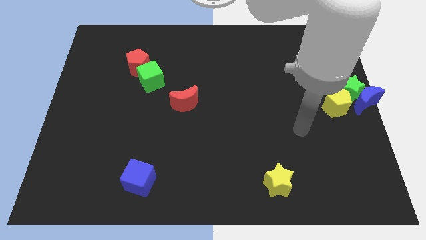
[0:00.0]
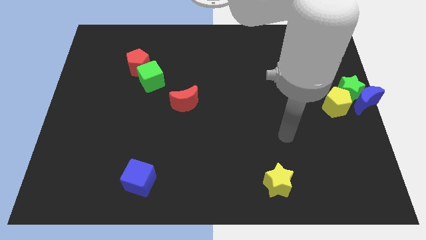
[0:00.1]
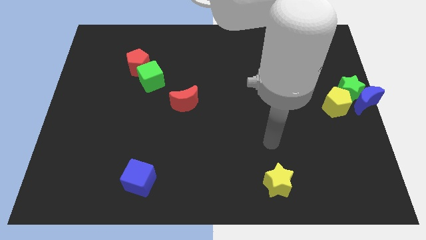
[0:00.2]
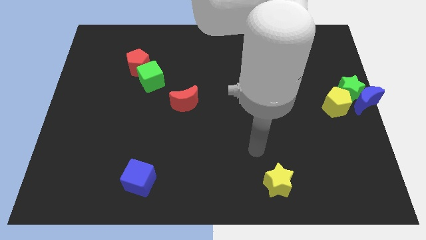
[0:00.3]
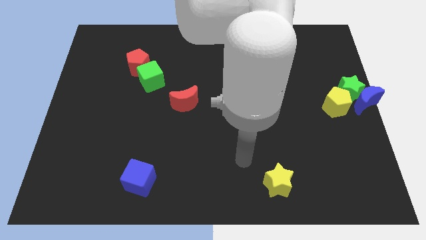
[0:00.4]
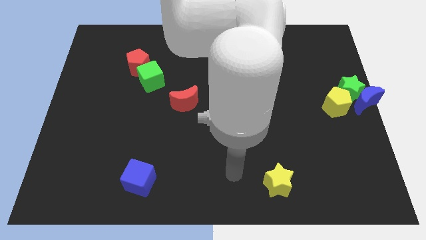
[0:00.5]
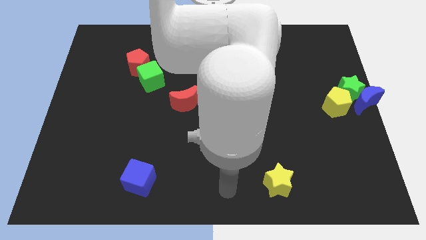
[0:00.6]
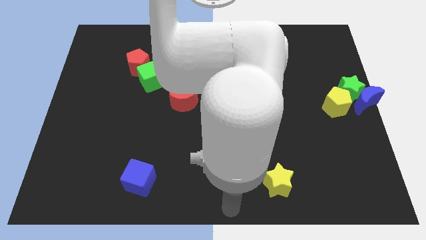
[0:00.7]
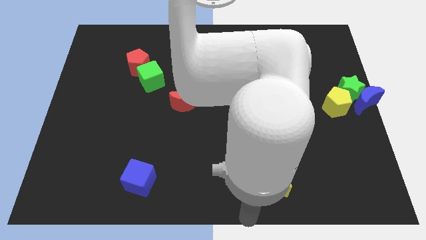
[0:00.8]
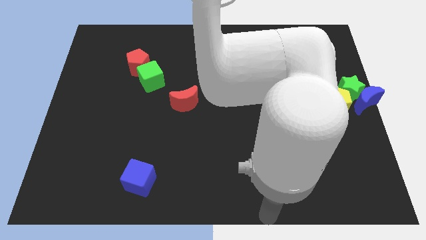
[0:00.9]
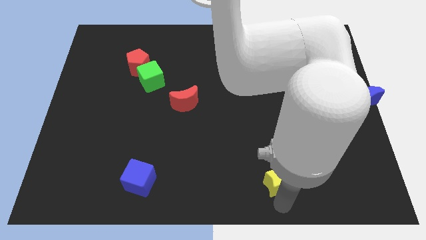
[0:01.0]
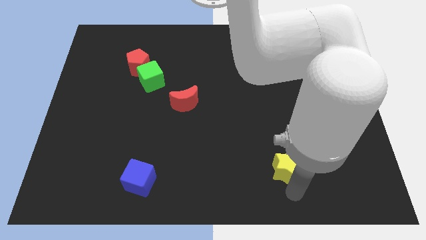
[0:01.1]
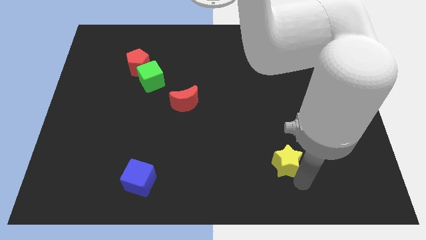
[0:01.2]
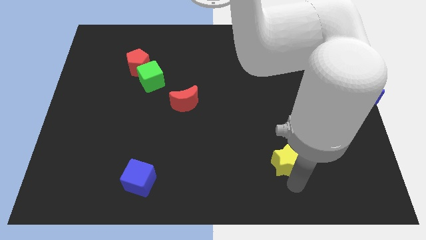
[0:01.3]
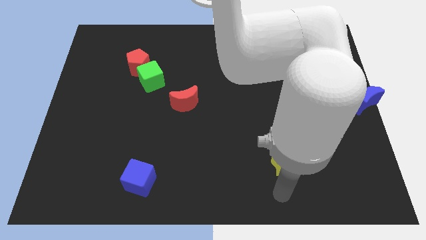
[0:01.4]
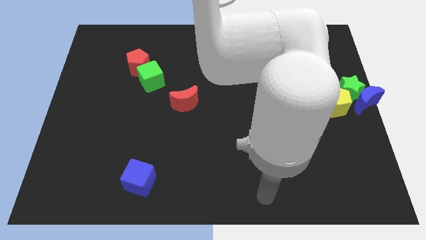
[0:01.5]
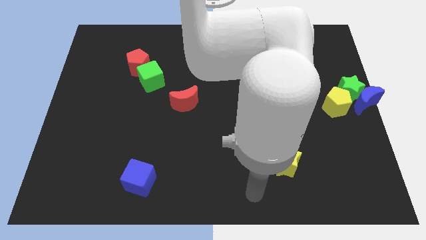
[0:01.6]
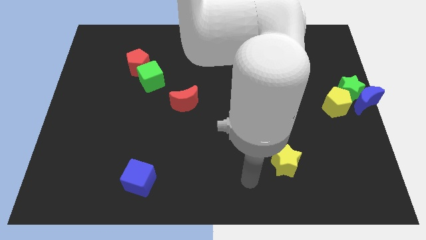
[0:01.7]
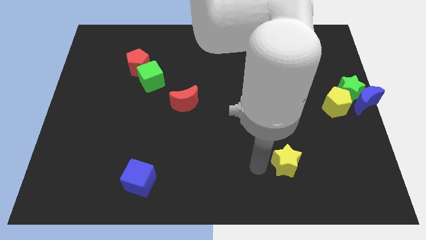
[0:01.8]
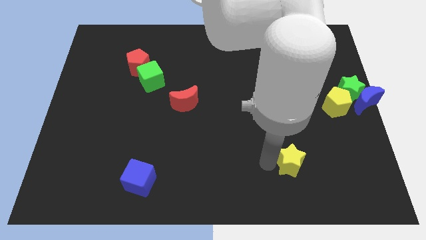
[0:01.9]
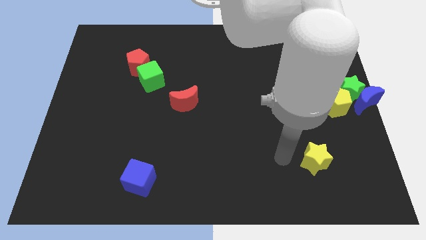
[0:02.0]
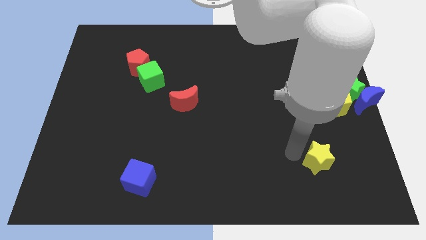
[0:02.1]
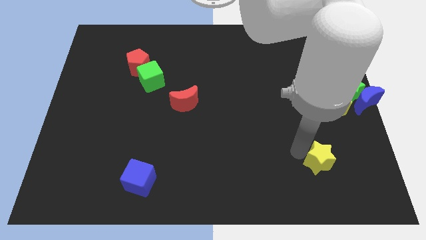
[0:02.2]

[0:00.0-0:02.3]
move the yellow star diagonally to blue moon

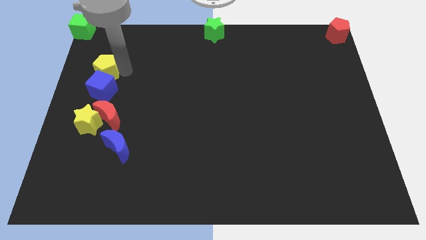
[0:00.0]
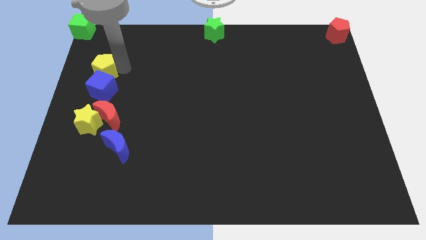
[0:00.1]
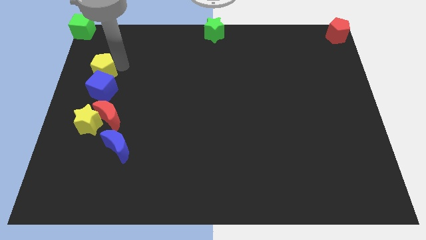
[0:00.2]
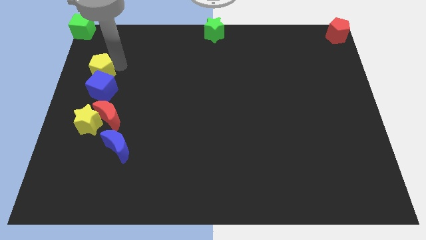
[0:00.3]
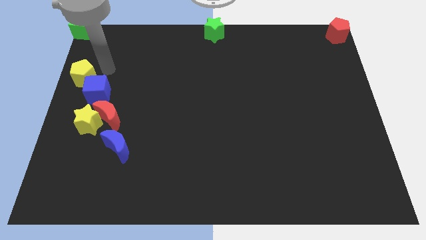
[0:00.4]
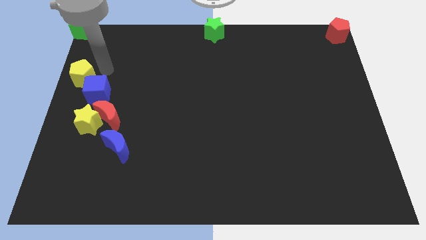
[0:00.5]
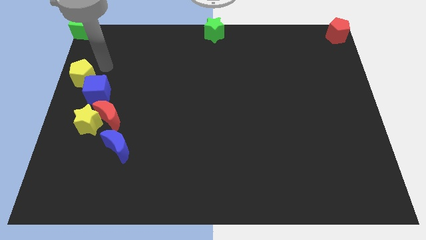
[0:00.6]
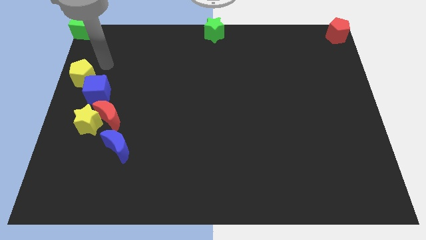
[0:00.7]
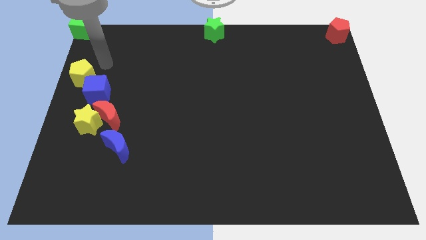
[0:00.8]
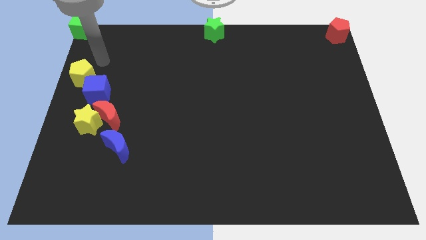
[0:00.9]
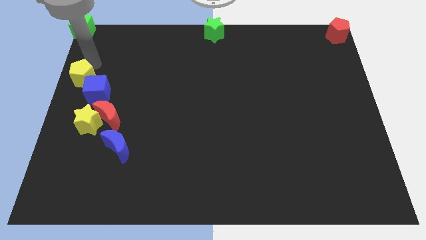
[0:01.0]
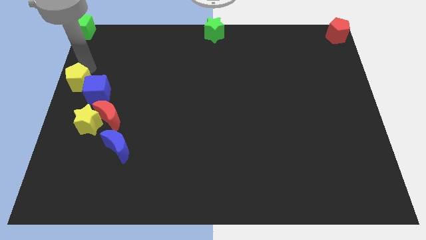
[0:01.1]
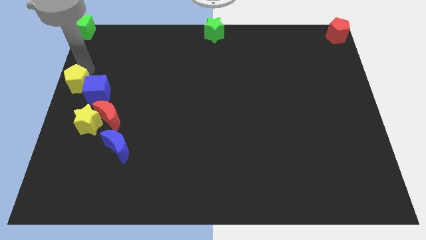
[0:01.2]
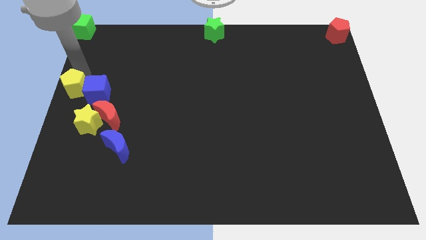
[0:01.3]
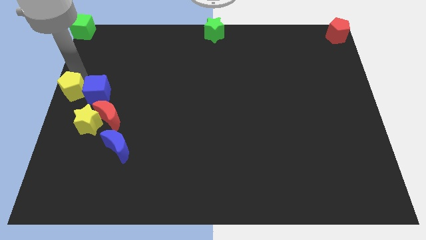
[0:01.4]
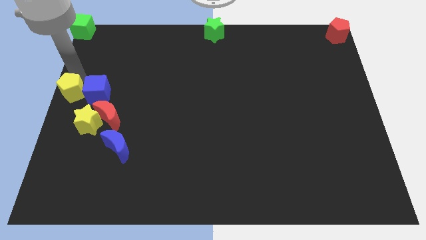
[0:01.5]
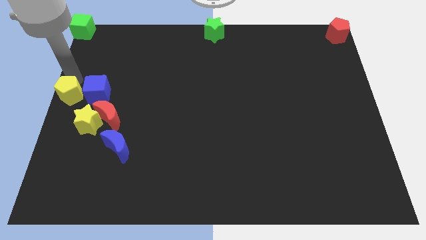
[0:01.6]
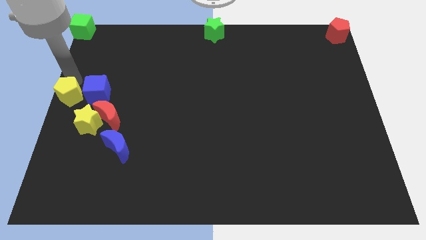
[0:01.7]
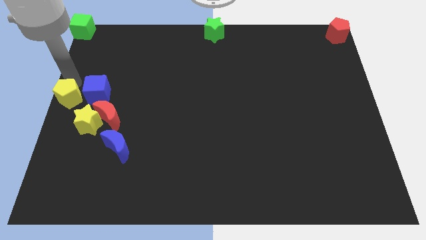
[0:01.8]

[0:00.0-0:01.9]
push the yellow pentagon to the left of the blue cube

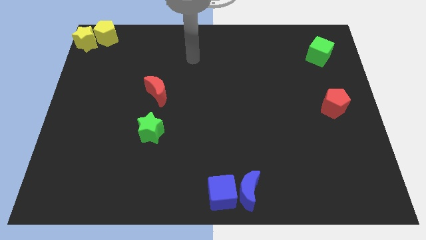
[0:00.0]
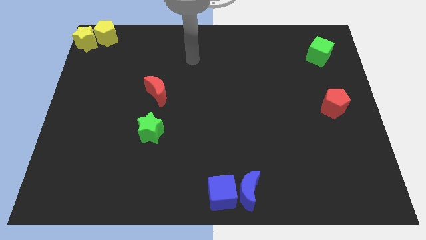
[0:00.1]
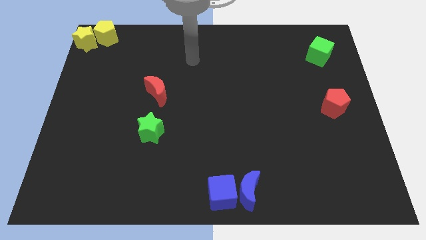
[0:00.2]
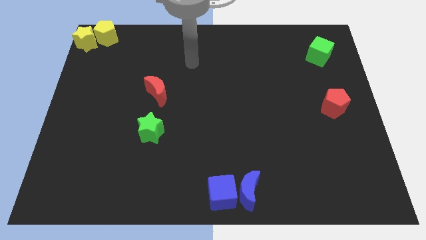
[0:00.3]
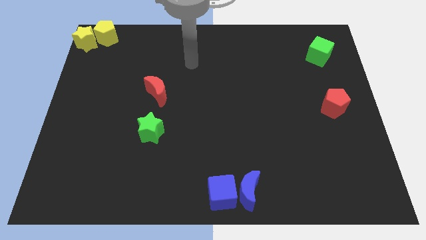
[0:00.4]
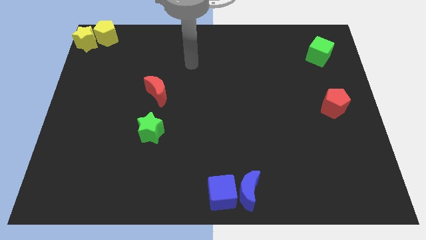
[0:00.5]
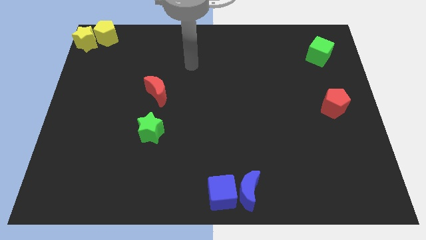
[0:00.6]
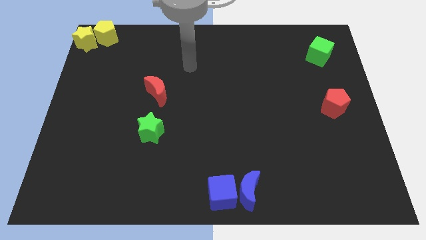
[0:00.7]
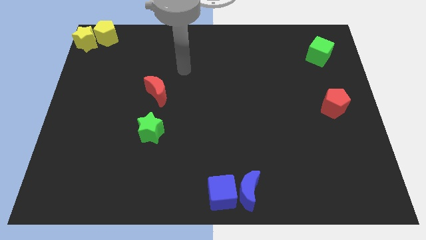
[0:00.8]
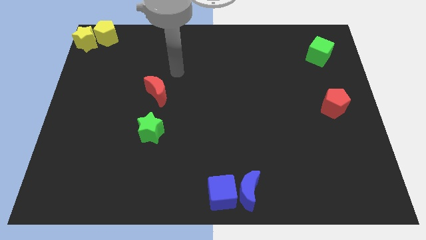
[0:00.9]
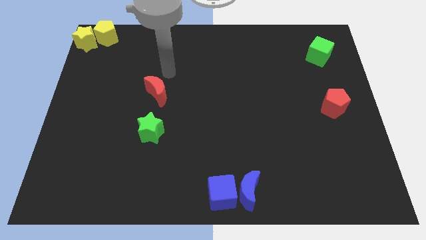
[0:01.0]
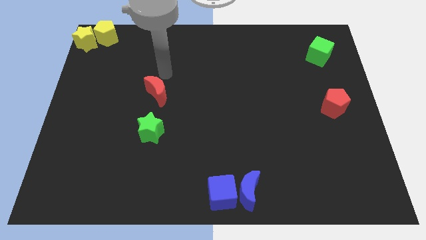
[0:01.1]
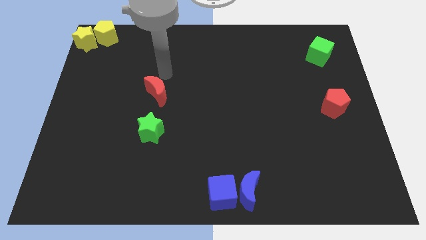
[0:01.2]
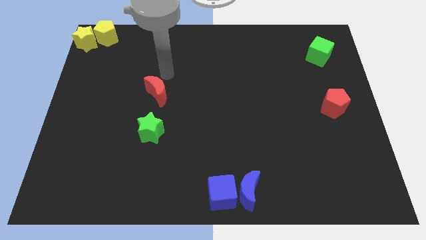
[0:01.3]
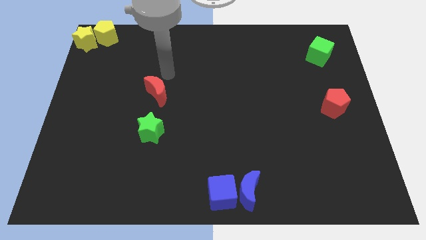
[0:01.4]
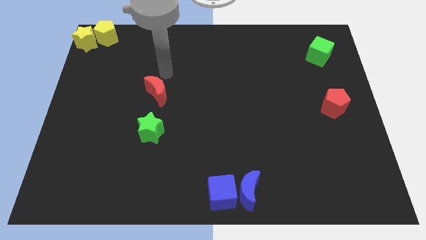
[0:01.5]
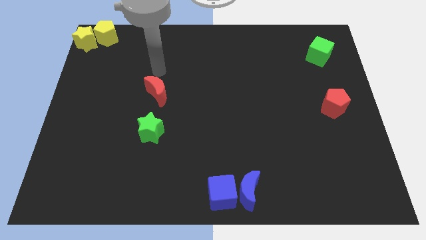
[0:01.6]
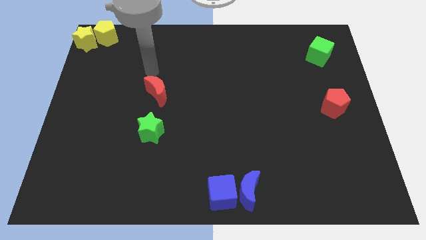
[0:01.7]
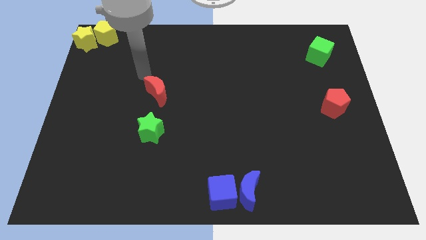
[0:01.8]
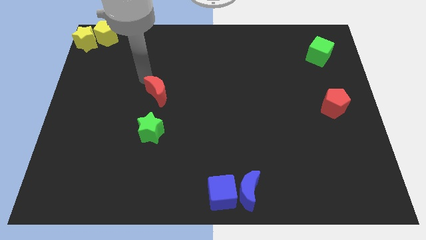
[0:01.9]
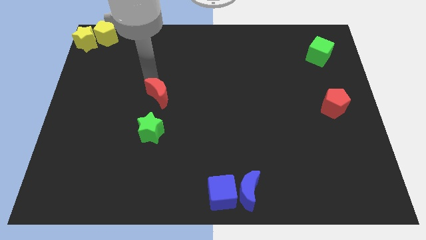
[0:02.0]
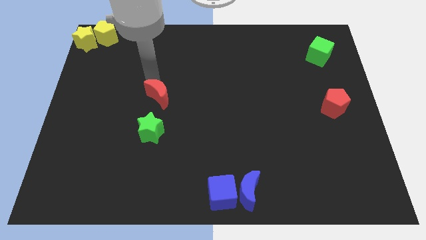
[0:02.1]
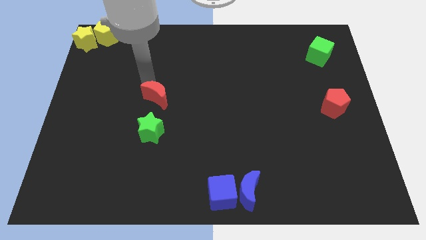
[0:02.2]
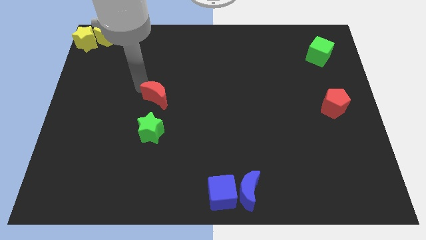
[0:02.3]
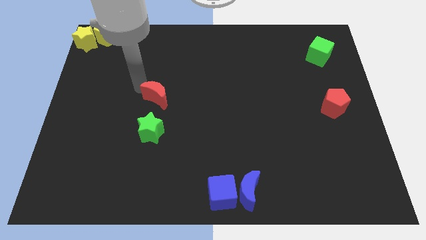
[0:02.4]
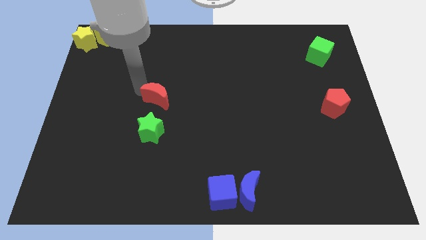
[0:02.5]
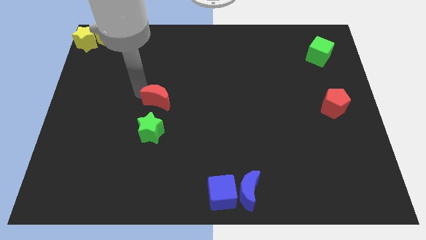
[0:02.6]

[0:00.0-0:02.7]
move the red crescent slightly towards green star

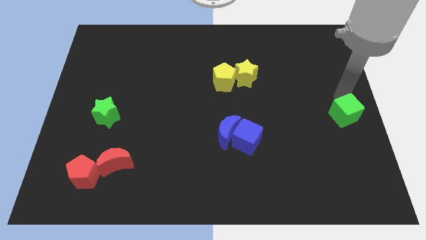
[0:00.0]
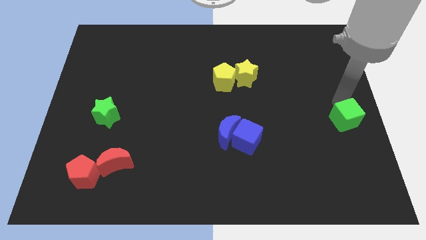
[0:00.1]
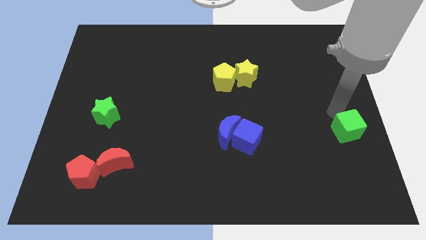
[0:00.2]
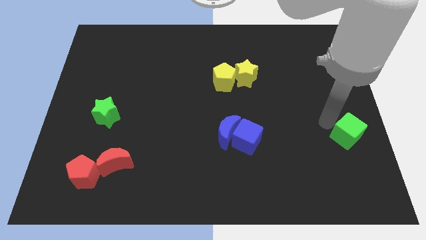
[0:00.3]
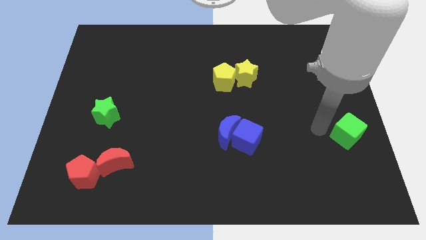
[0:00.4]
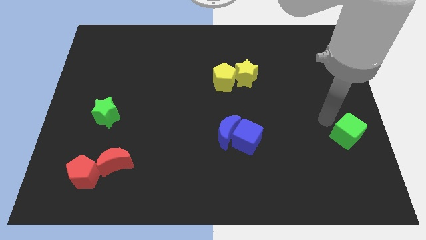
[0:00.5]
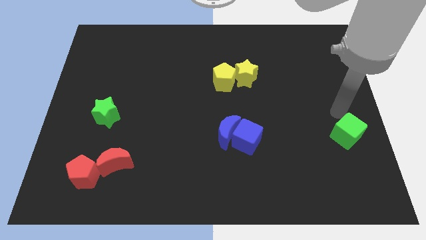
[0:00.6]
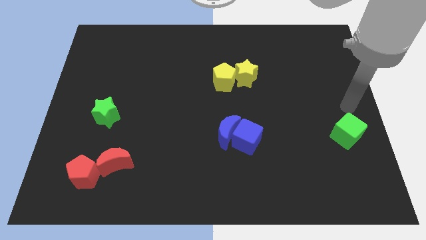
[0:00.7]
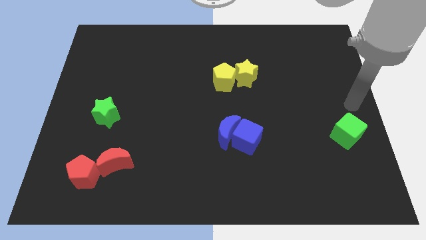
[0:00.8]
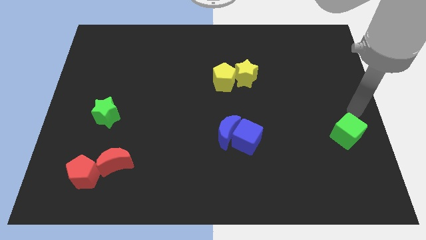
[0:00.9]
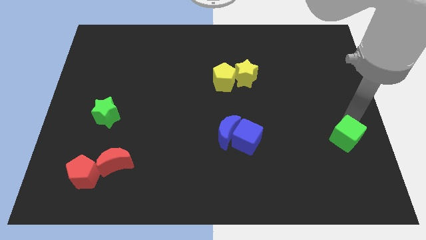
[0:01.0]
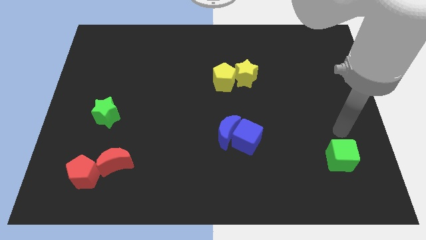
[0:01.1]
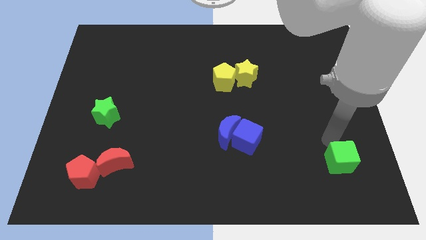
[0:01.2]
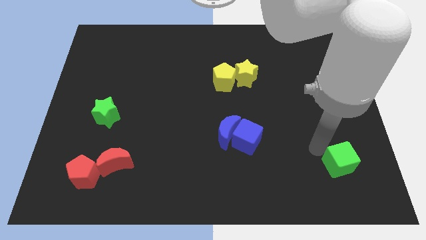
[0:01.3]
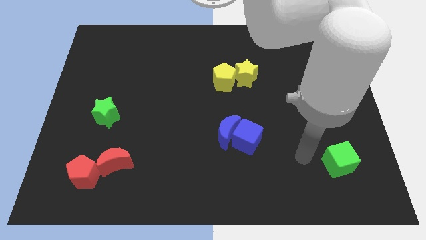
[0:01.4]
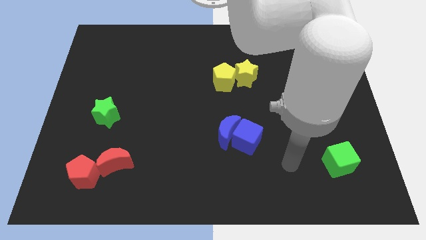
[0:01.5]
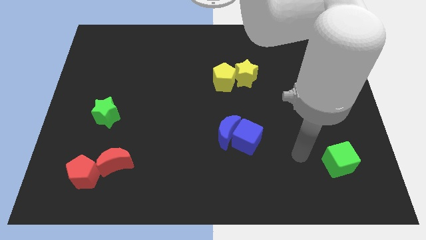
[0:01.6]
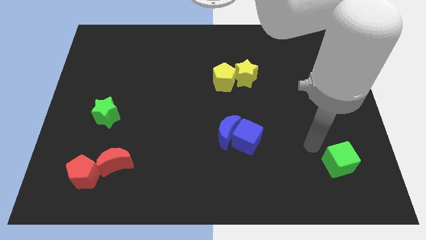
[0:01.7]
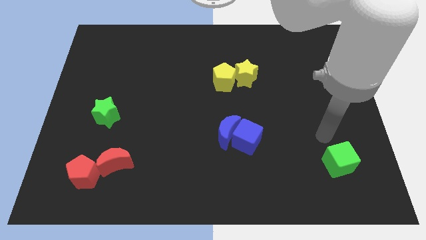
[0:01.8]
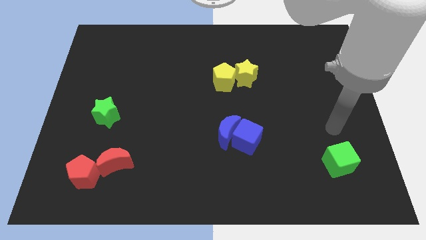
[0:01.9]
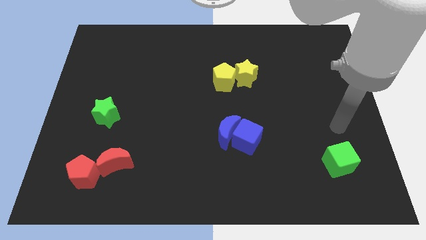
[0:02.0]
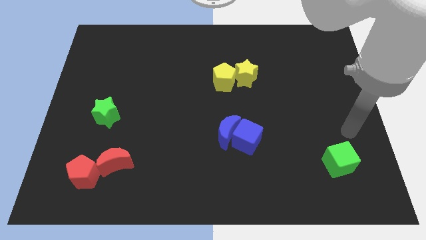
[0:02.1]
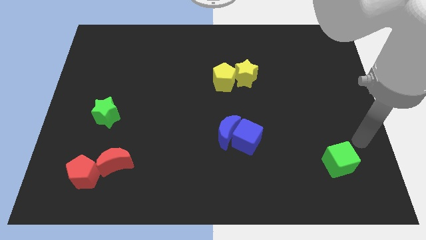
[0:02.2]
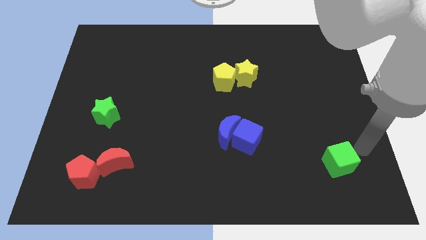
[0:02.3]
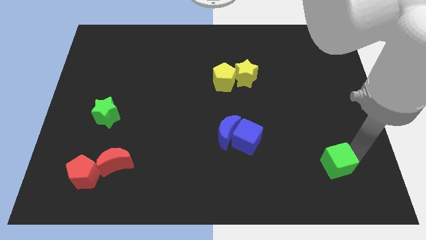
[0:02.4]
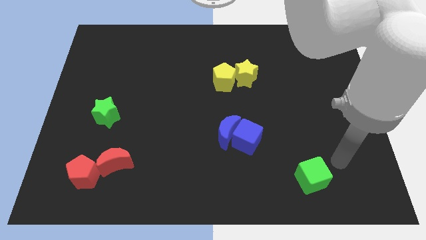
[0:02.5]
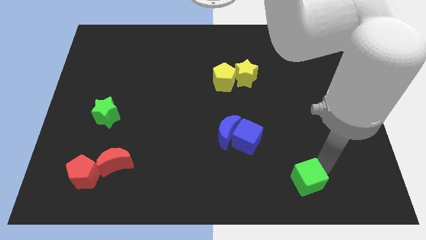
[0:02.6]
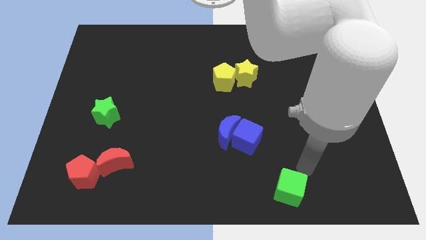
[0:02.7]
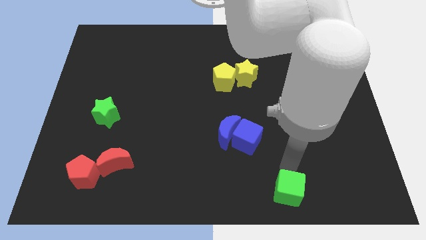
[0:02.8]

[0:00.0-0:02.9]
place the green cube diagonally bottom right to the blue cube
